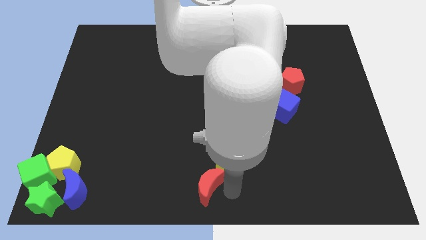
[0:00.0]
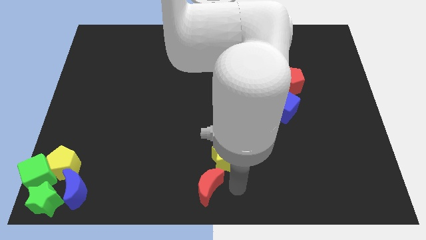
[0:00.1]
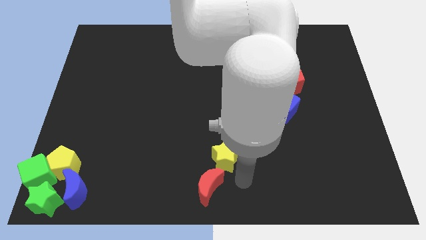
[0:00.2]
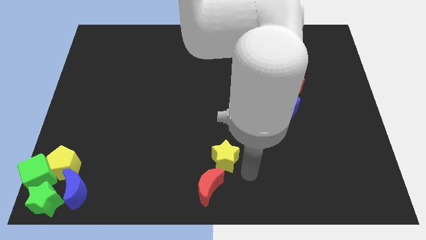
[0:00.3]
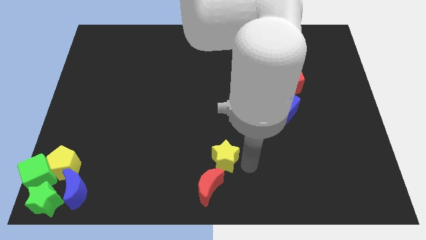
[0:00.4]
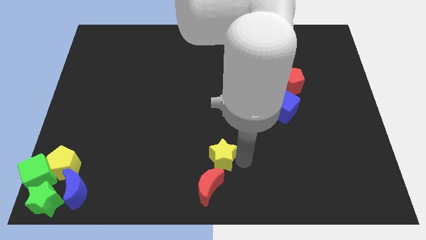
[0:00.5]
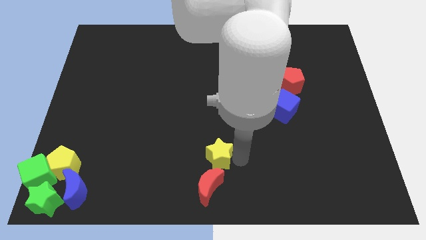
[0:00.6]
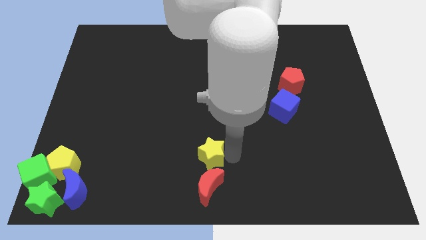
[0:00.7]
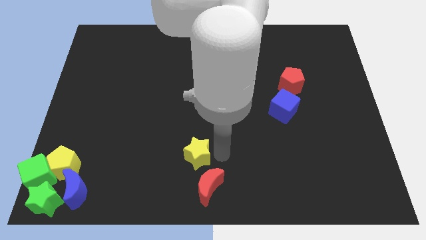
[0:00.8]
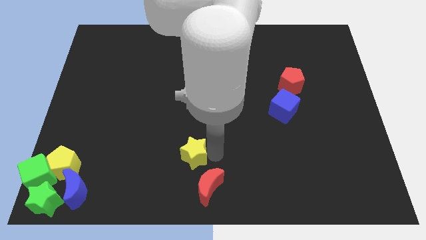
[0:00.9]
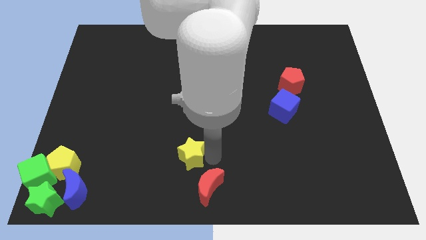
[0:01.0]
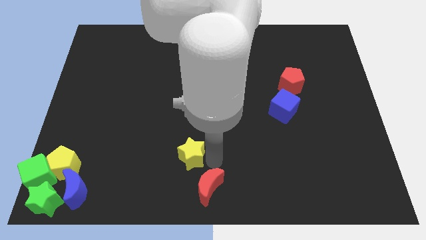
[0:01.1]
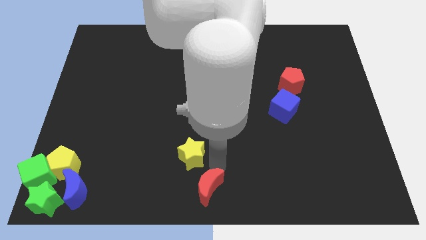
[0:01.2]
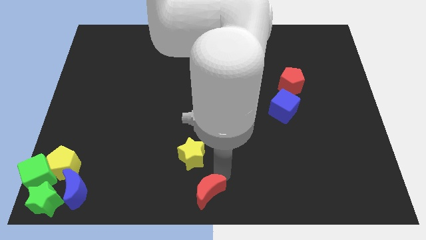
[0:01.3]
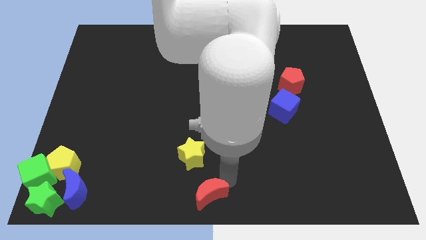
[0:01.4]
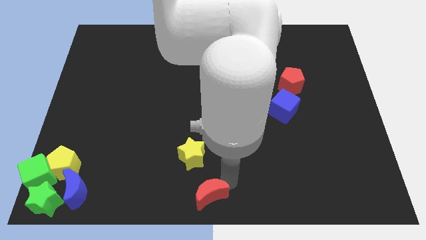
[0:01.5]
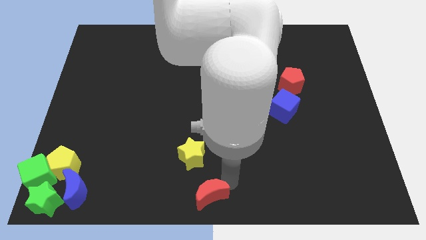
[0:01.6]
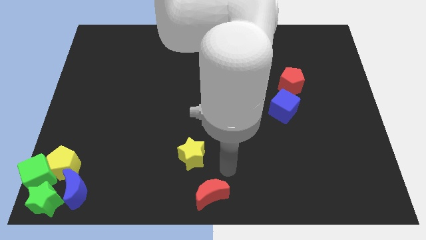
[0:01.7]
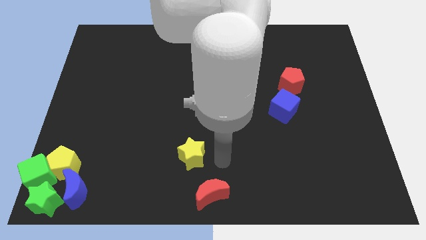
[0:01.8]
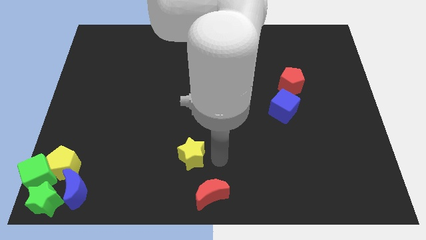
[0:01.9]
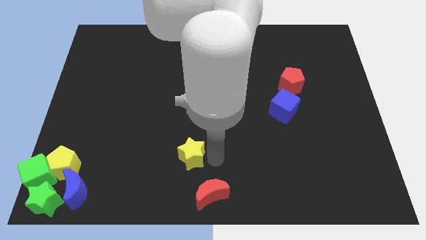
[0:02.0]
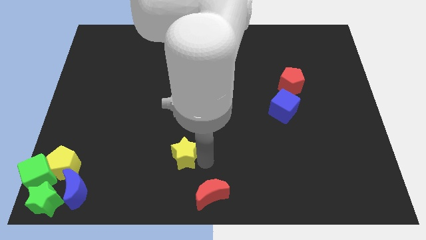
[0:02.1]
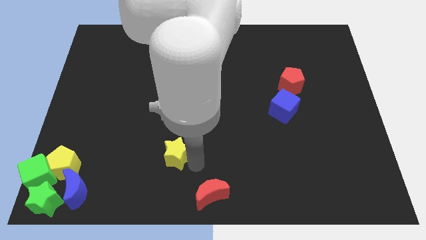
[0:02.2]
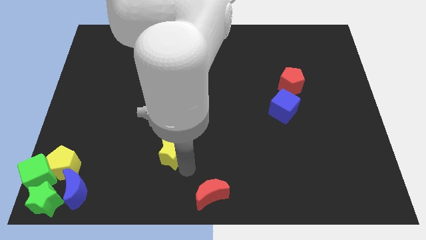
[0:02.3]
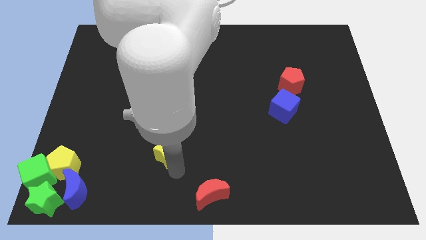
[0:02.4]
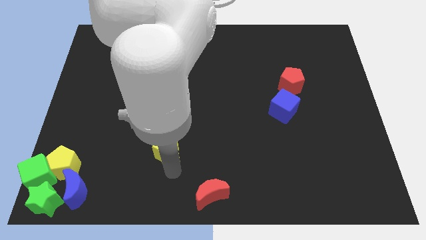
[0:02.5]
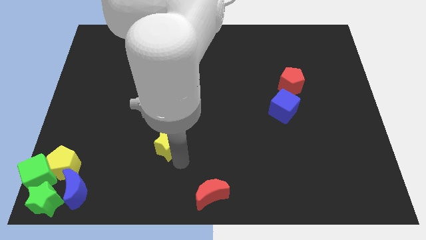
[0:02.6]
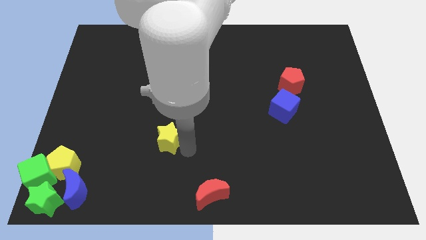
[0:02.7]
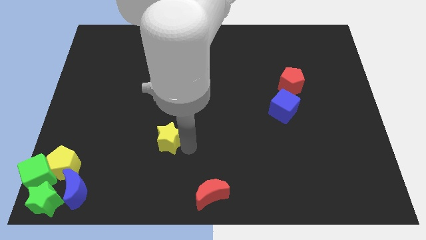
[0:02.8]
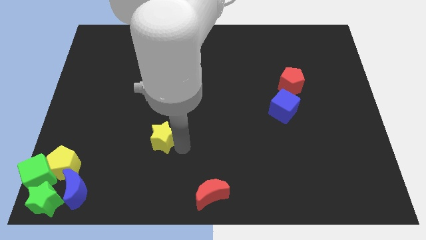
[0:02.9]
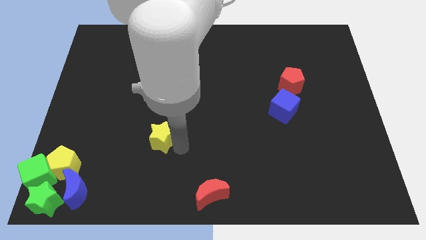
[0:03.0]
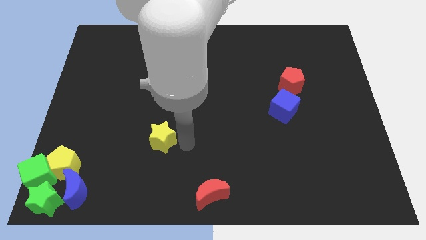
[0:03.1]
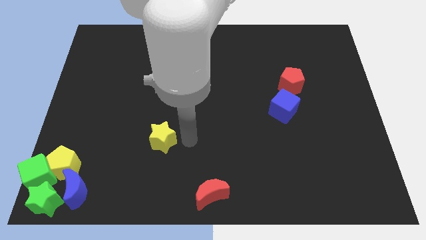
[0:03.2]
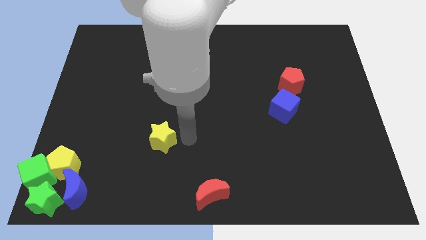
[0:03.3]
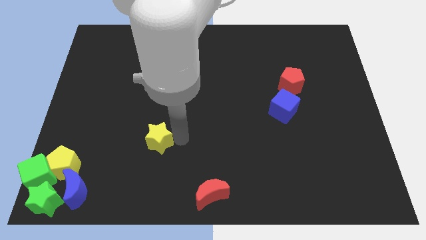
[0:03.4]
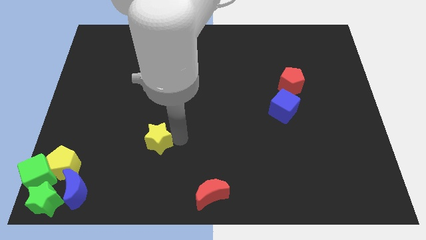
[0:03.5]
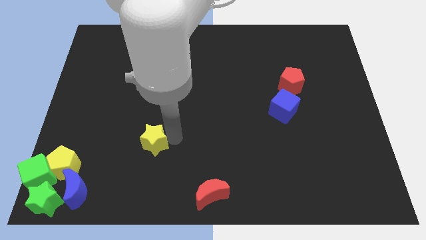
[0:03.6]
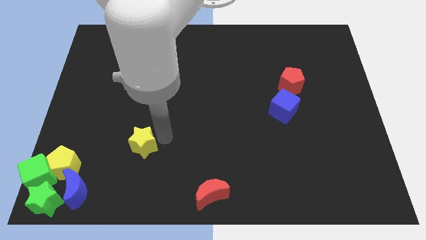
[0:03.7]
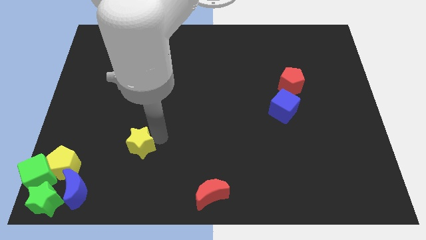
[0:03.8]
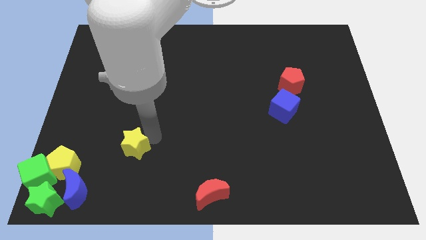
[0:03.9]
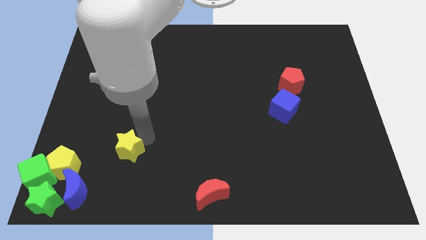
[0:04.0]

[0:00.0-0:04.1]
move the yellow star towards the yellow pentagon

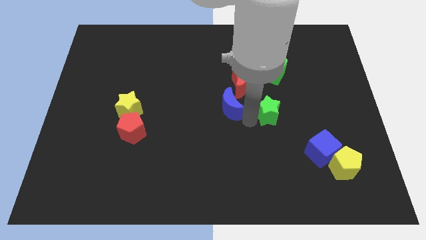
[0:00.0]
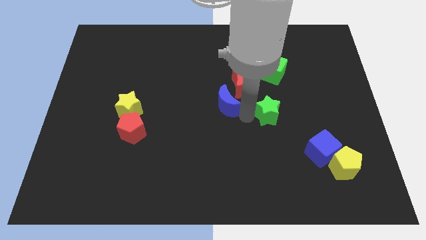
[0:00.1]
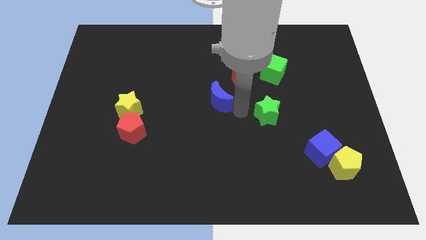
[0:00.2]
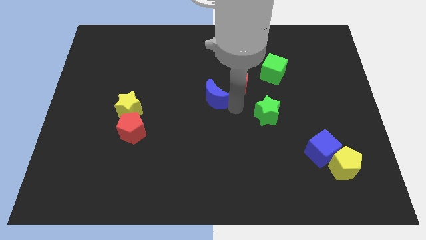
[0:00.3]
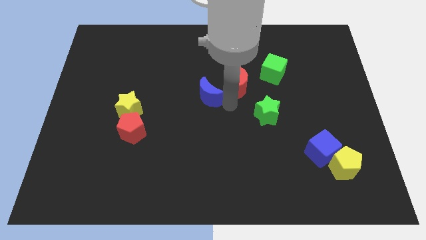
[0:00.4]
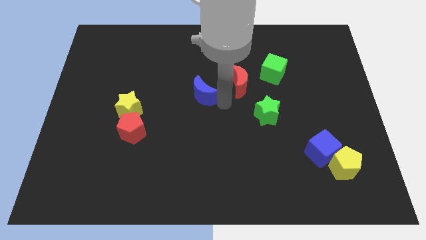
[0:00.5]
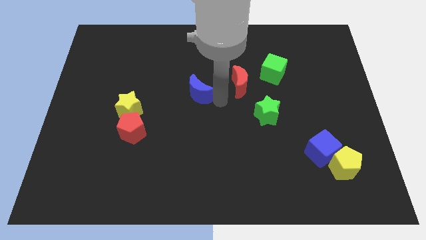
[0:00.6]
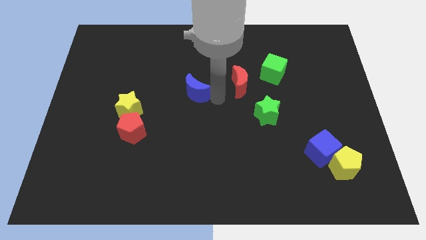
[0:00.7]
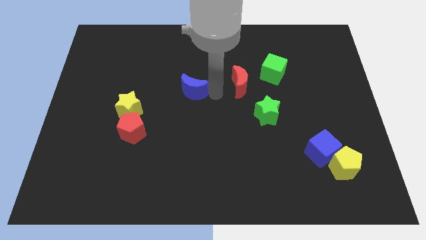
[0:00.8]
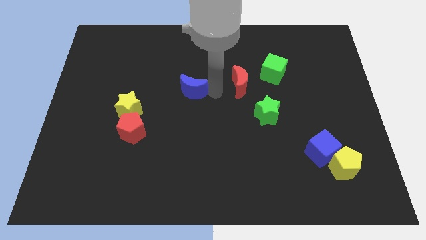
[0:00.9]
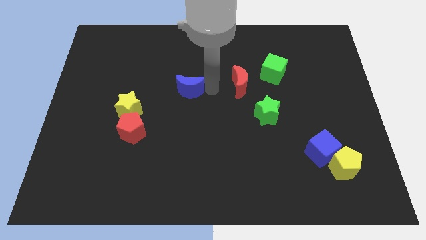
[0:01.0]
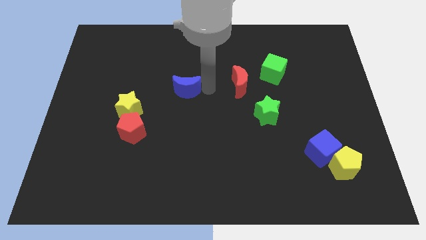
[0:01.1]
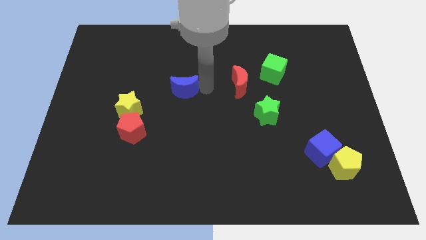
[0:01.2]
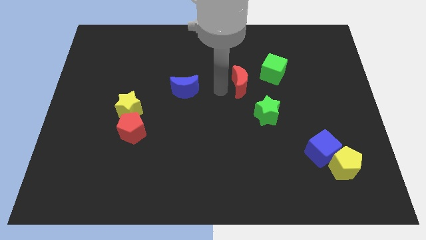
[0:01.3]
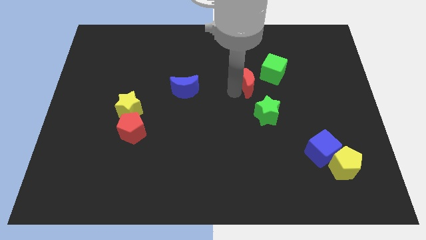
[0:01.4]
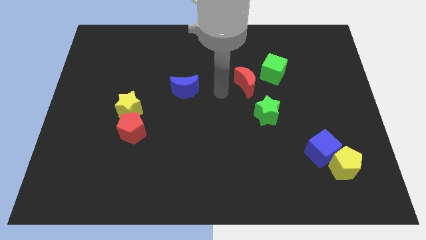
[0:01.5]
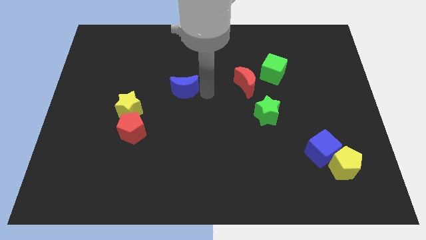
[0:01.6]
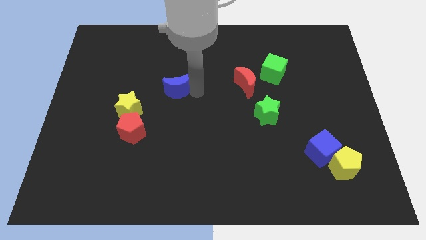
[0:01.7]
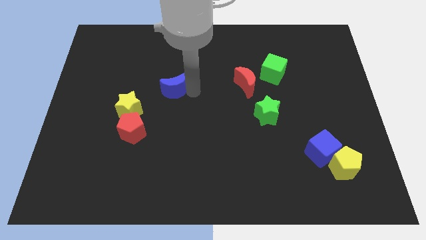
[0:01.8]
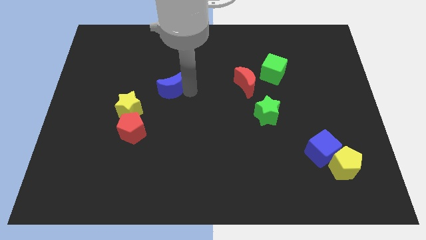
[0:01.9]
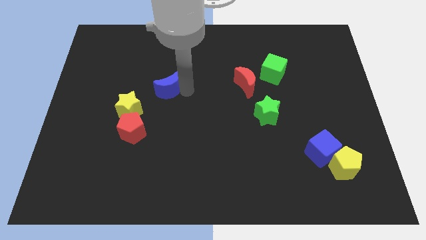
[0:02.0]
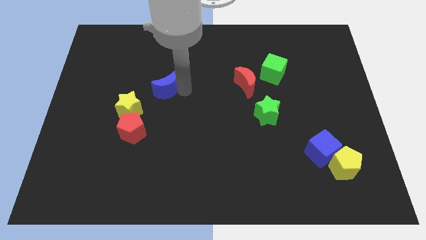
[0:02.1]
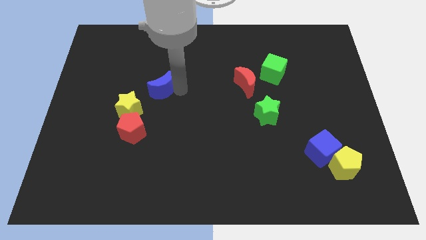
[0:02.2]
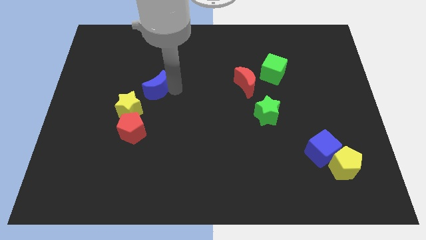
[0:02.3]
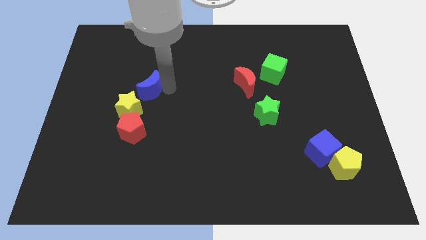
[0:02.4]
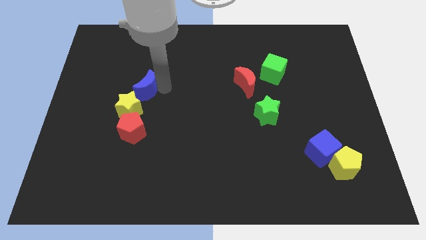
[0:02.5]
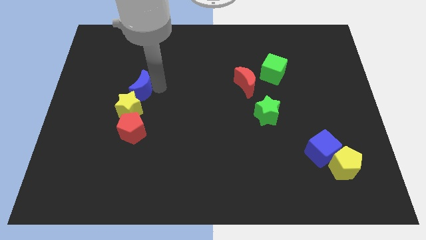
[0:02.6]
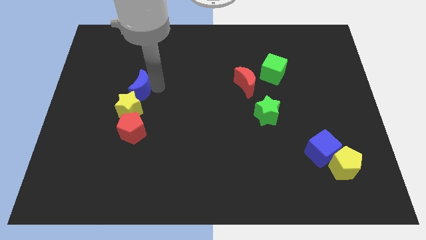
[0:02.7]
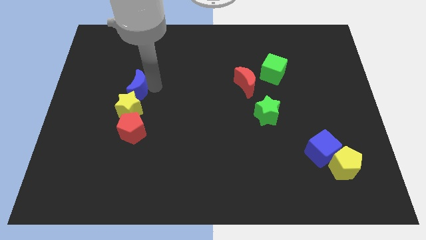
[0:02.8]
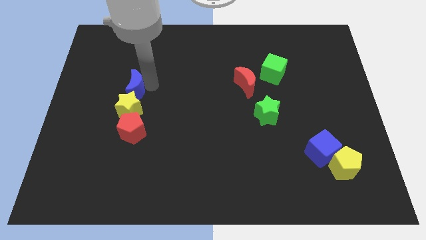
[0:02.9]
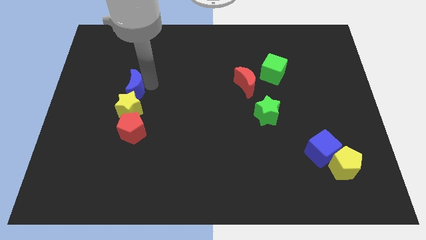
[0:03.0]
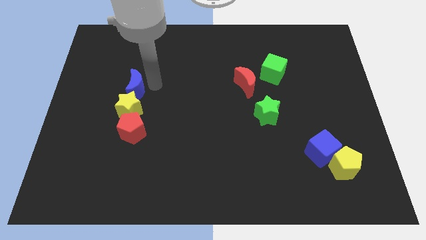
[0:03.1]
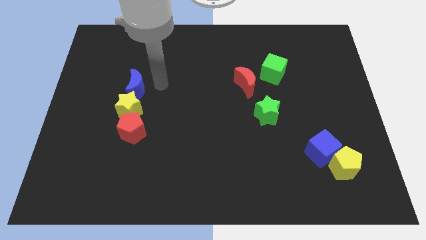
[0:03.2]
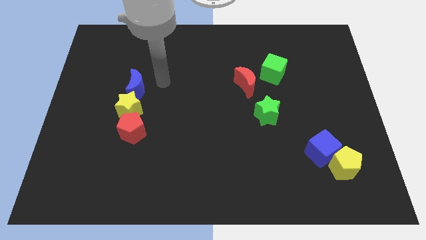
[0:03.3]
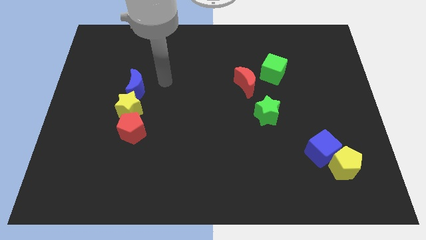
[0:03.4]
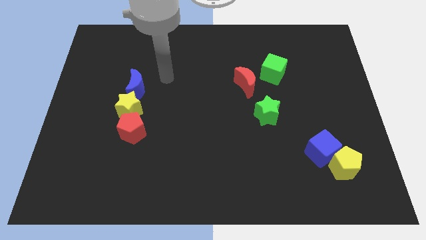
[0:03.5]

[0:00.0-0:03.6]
place the blue crescent above the yellow star

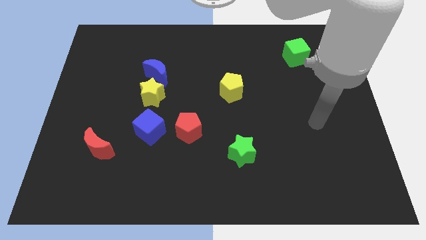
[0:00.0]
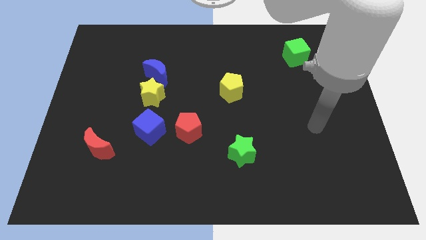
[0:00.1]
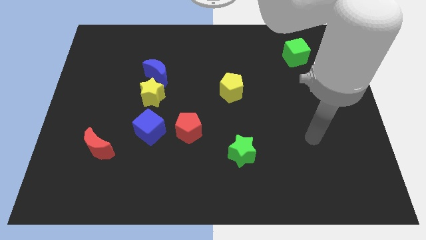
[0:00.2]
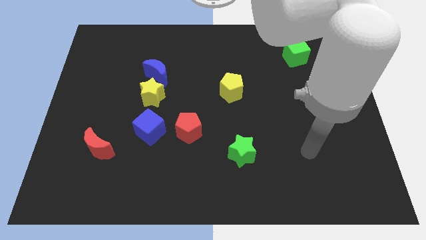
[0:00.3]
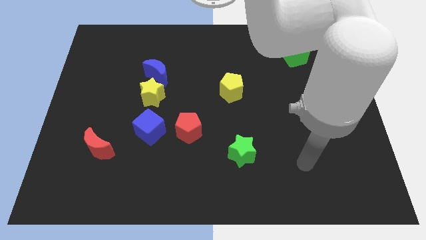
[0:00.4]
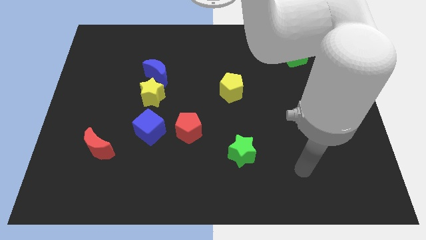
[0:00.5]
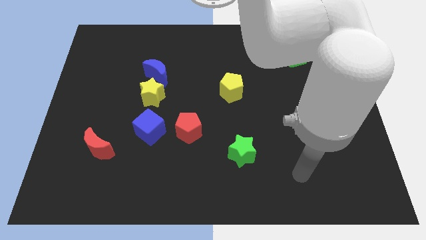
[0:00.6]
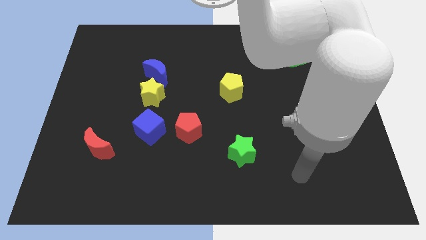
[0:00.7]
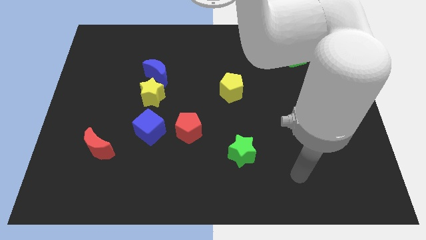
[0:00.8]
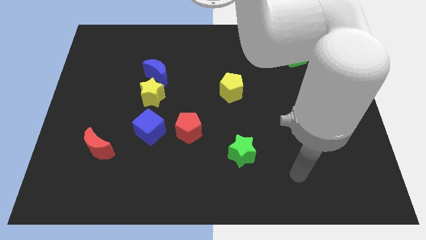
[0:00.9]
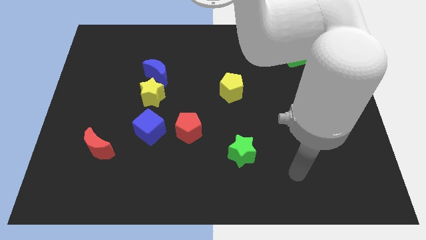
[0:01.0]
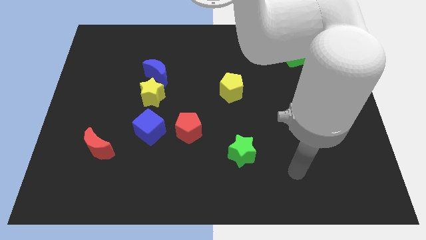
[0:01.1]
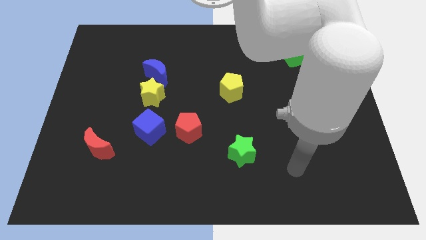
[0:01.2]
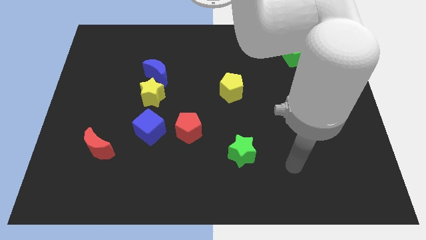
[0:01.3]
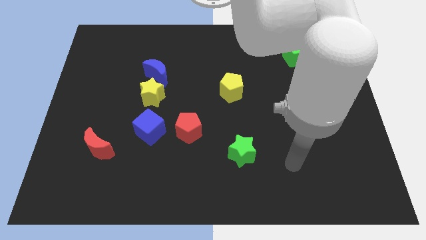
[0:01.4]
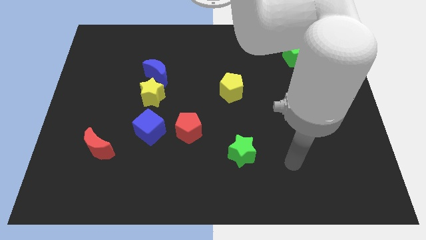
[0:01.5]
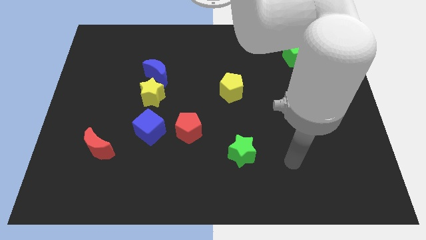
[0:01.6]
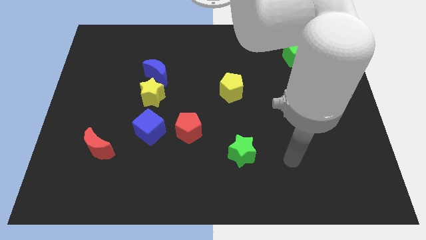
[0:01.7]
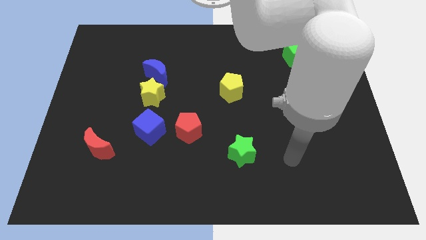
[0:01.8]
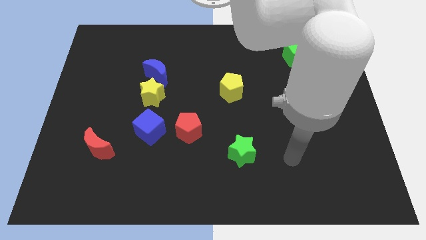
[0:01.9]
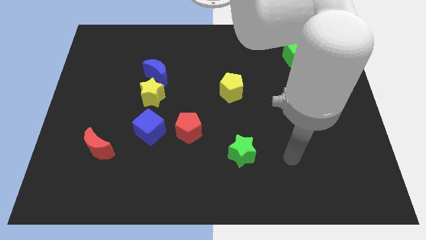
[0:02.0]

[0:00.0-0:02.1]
slide the arm to the right side of the green star
